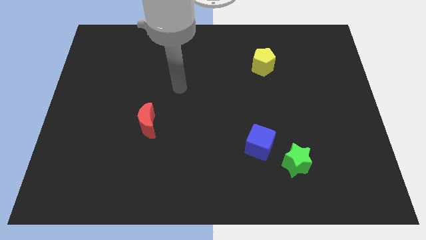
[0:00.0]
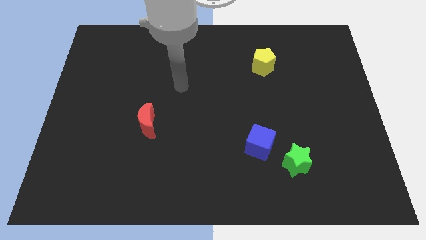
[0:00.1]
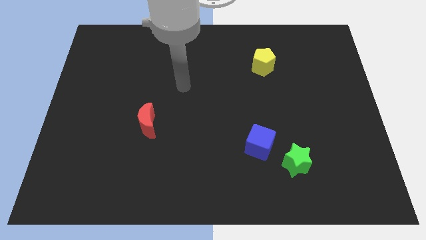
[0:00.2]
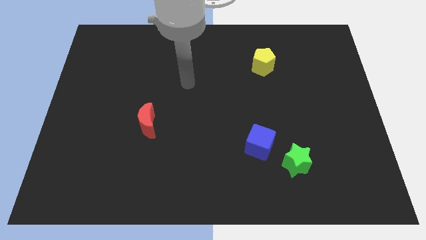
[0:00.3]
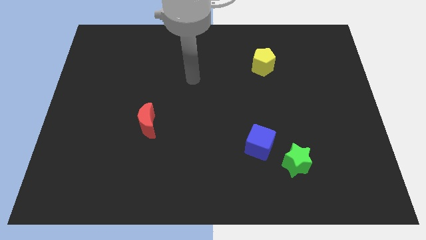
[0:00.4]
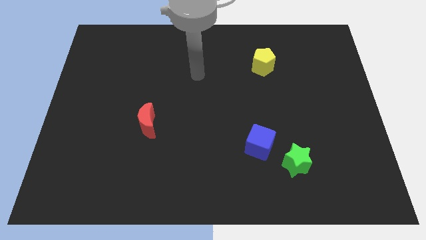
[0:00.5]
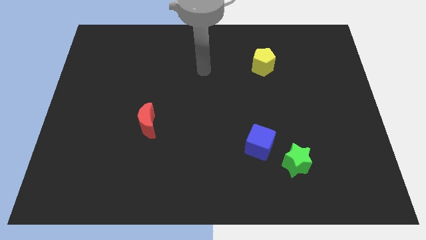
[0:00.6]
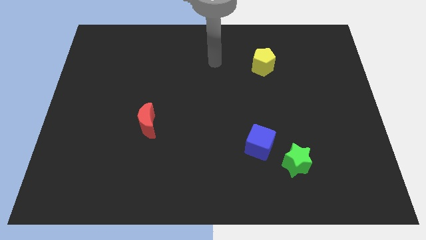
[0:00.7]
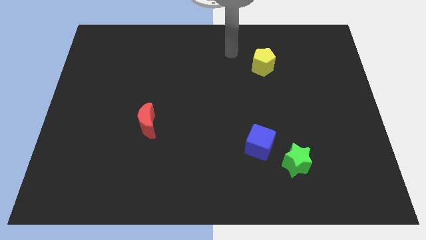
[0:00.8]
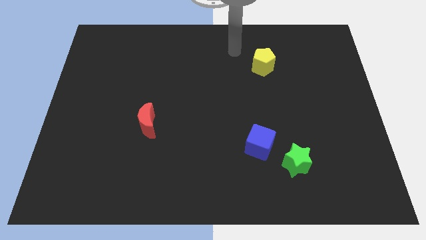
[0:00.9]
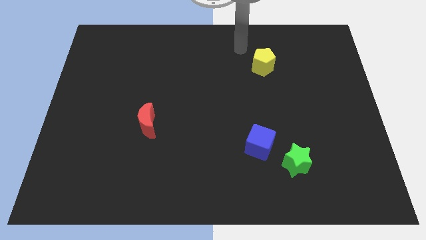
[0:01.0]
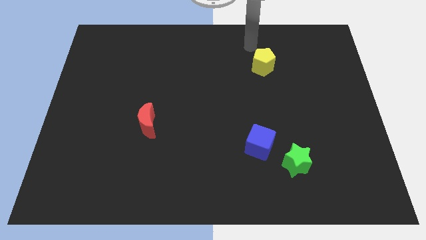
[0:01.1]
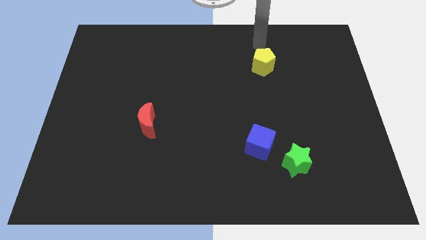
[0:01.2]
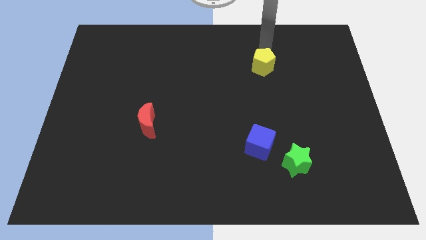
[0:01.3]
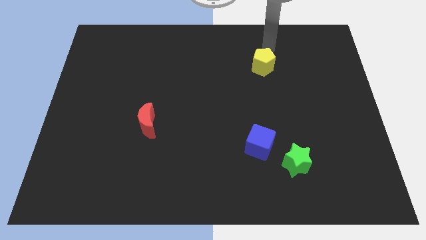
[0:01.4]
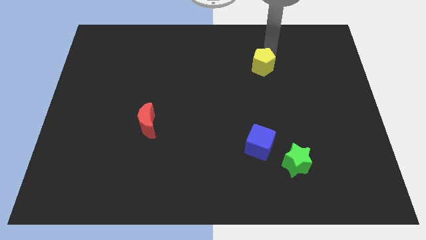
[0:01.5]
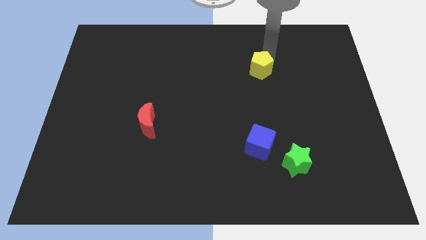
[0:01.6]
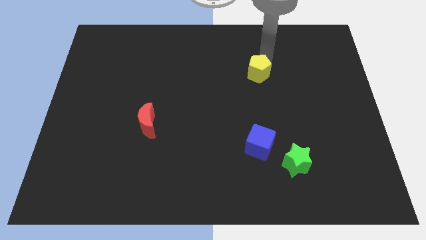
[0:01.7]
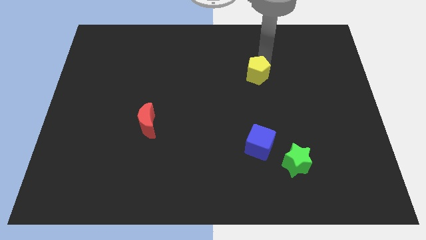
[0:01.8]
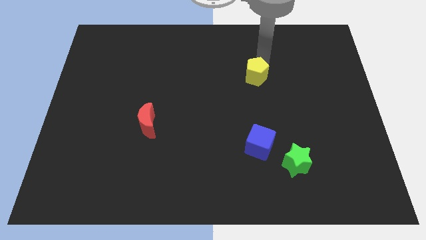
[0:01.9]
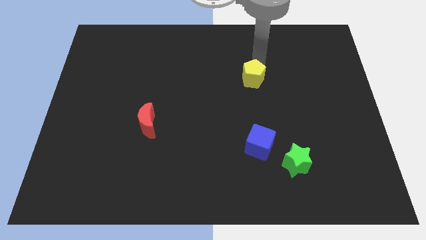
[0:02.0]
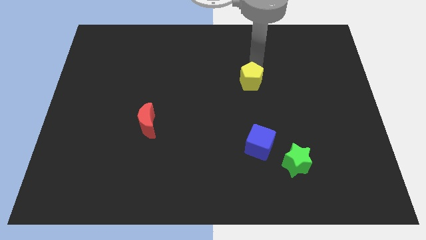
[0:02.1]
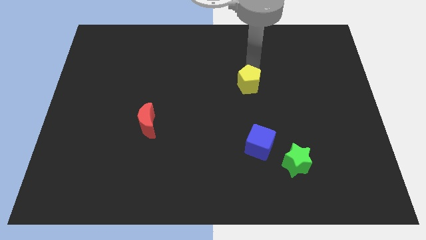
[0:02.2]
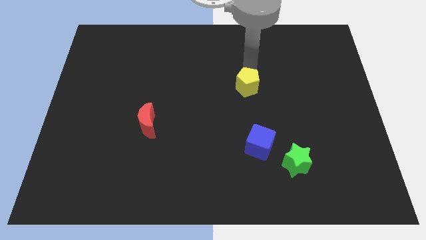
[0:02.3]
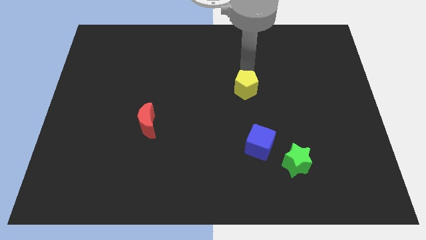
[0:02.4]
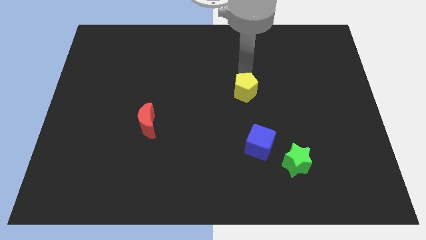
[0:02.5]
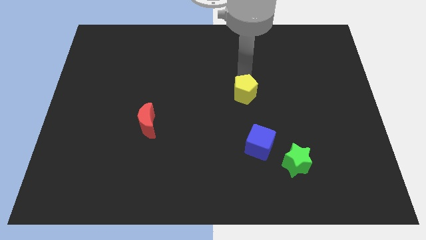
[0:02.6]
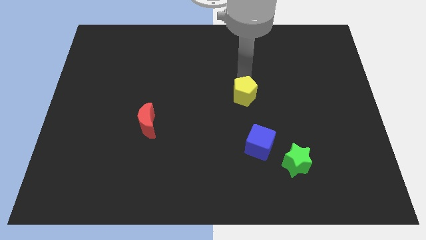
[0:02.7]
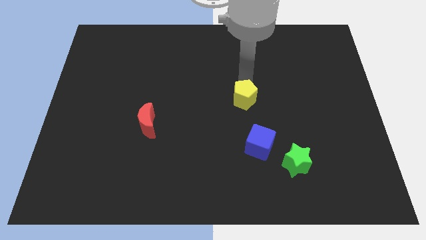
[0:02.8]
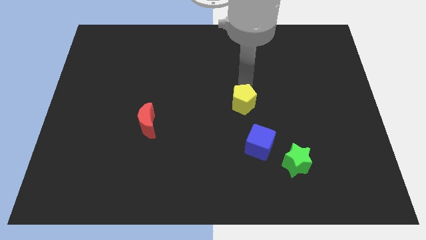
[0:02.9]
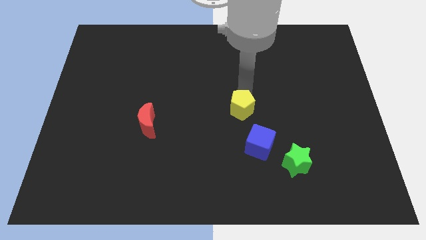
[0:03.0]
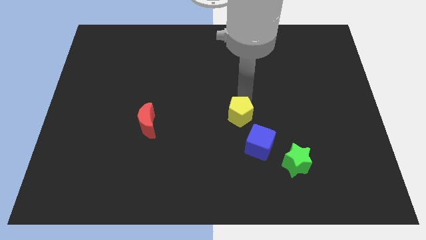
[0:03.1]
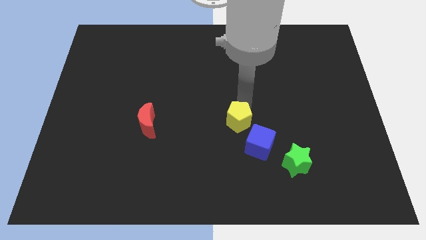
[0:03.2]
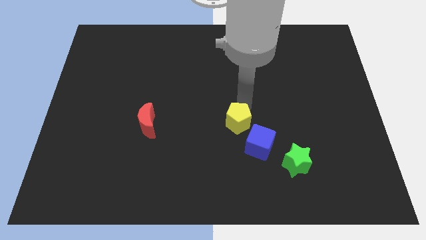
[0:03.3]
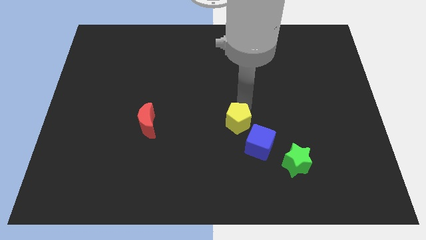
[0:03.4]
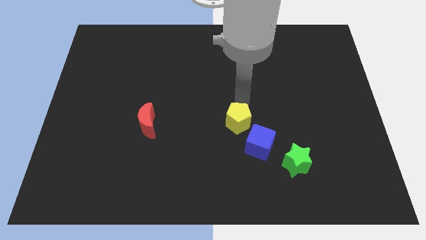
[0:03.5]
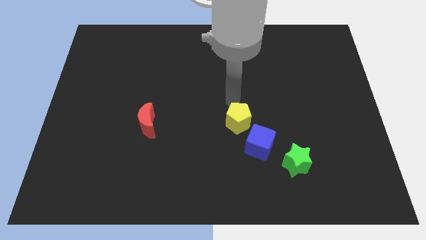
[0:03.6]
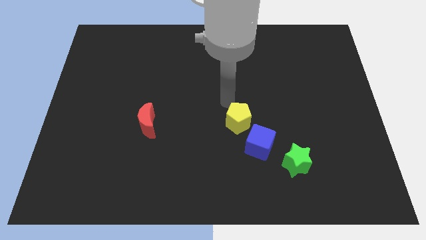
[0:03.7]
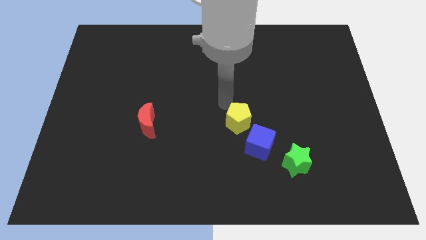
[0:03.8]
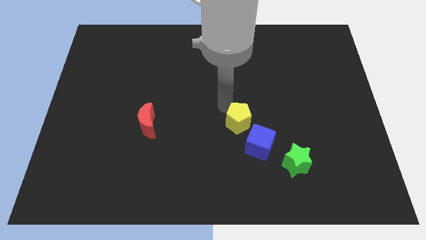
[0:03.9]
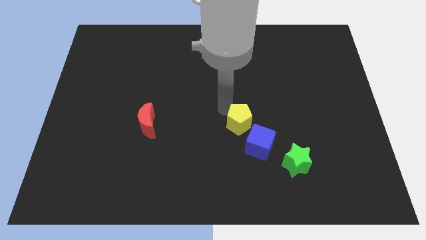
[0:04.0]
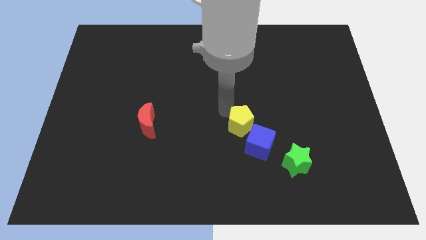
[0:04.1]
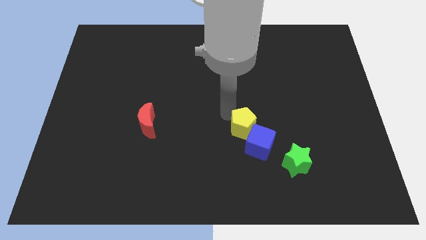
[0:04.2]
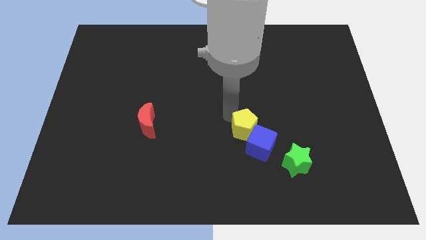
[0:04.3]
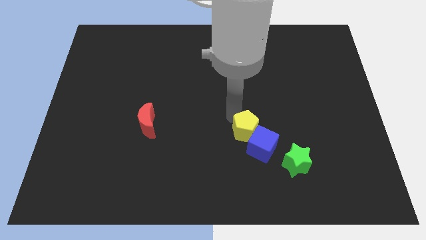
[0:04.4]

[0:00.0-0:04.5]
move the yellow block to the cube

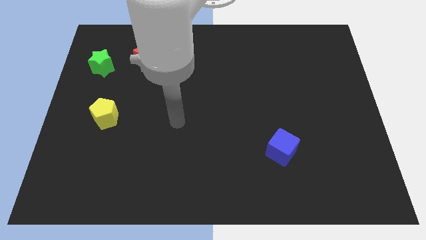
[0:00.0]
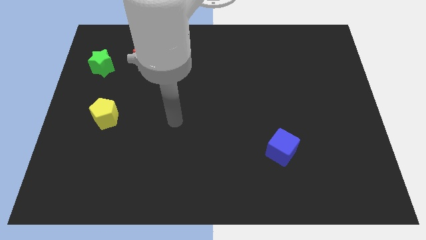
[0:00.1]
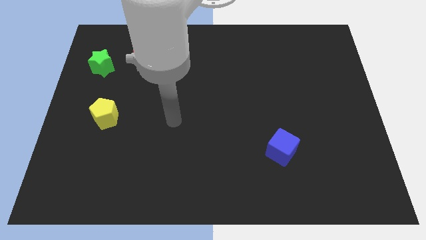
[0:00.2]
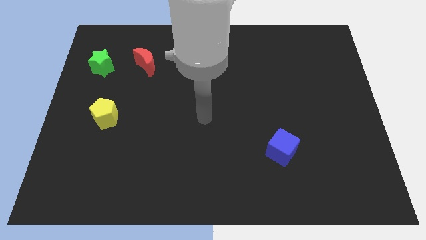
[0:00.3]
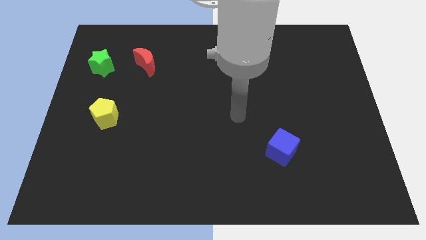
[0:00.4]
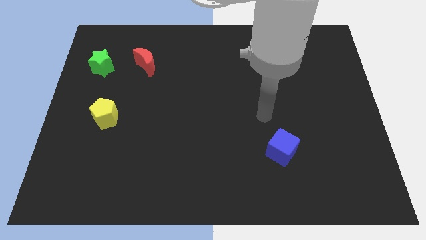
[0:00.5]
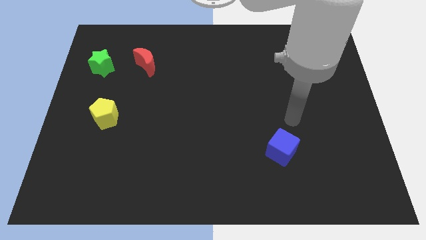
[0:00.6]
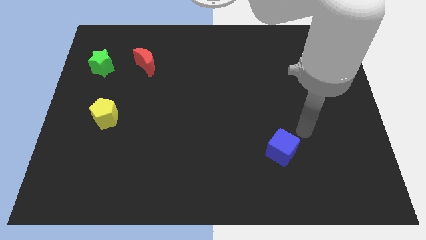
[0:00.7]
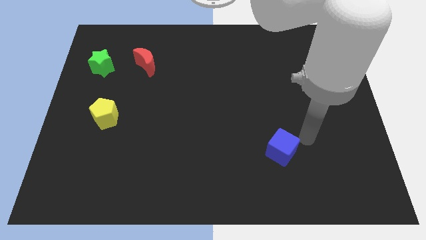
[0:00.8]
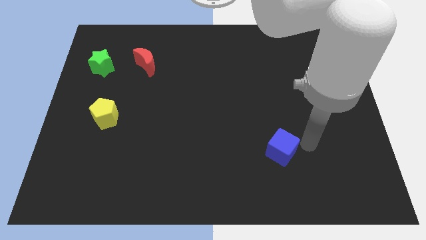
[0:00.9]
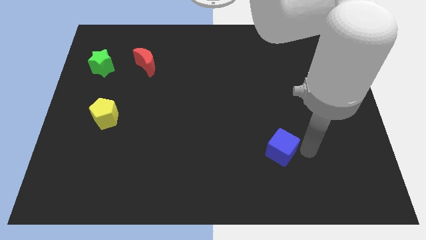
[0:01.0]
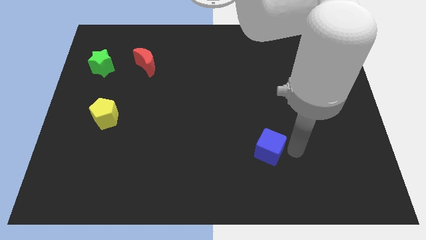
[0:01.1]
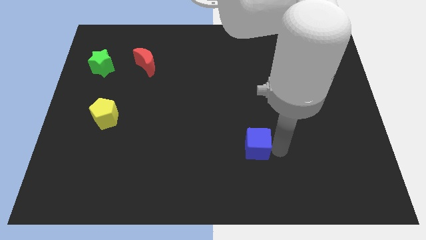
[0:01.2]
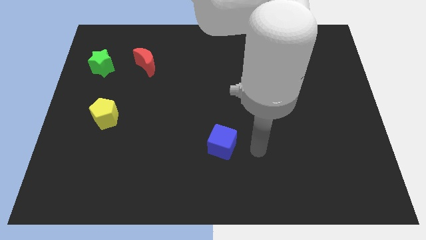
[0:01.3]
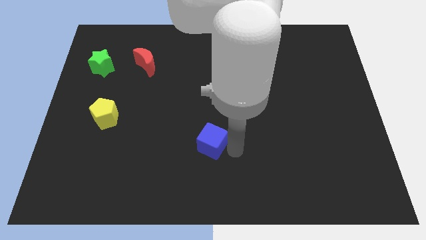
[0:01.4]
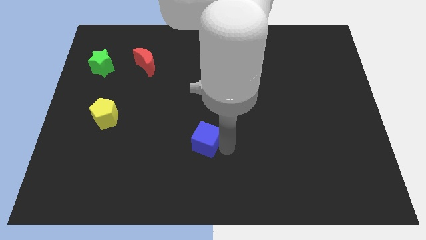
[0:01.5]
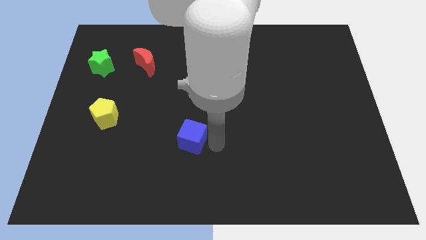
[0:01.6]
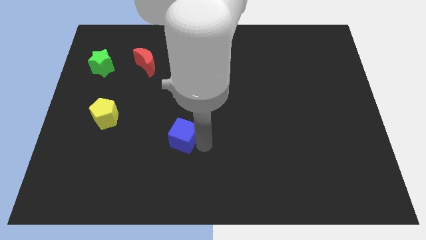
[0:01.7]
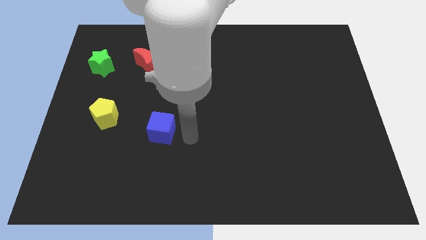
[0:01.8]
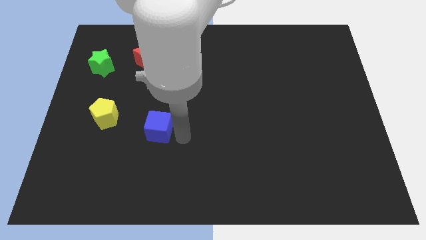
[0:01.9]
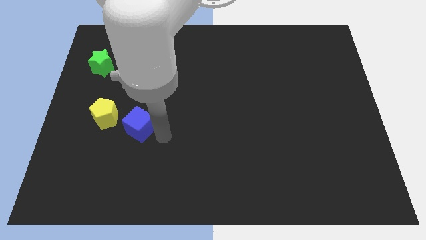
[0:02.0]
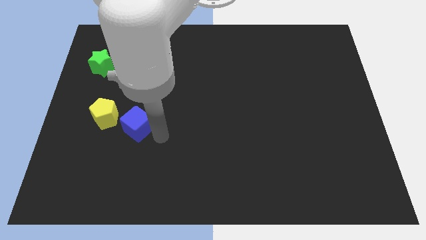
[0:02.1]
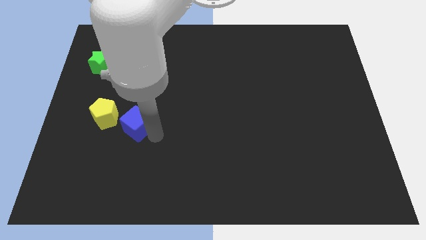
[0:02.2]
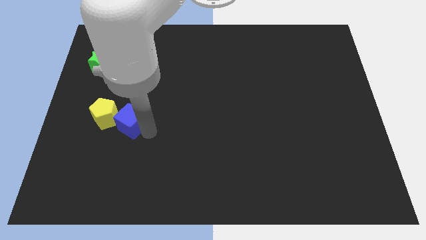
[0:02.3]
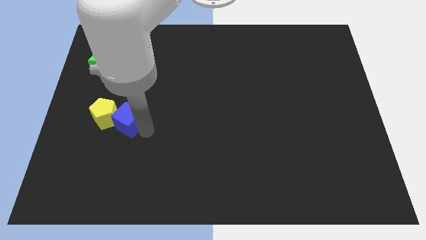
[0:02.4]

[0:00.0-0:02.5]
slide the cube close to the pentagon

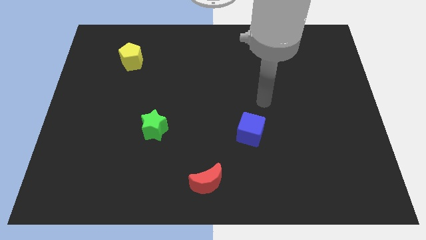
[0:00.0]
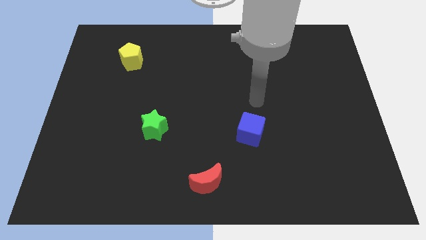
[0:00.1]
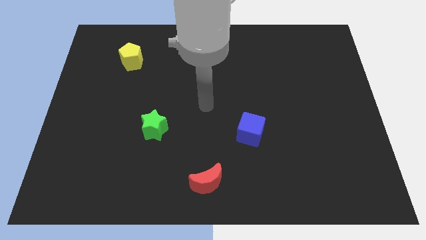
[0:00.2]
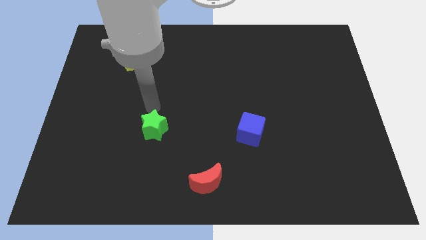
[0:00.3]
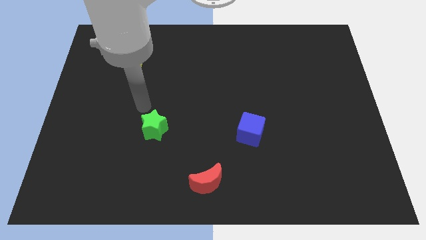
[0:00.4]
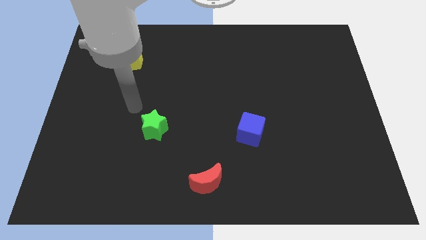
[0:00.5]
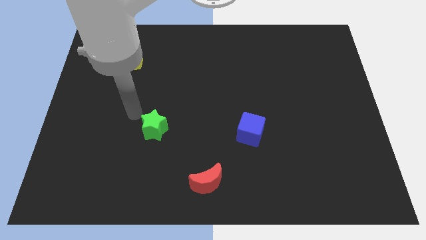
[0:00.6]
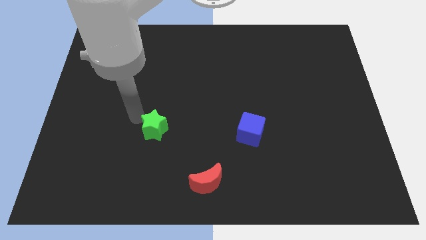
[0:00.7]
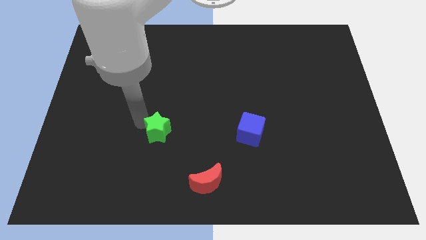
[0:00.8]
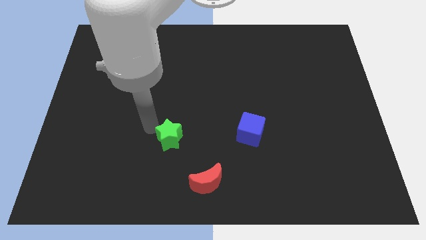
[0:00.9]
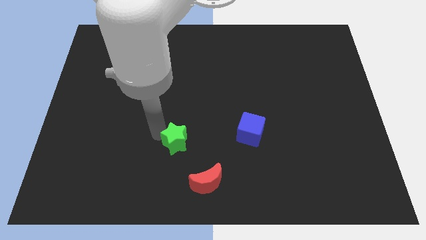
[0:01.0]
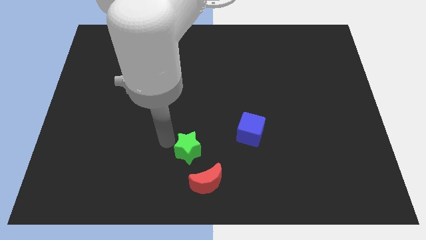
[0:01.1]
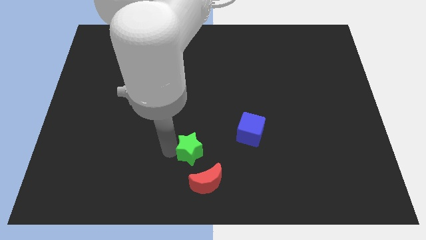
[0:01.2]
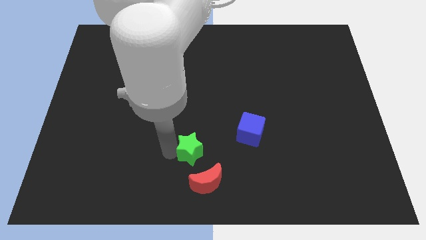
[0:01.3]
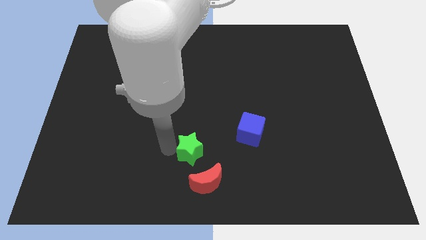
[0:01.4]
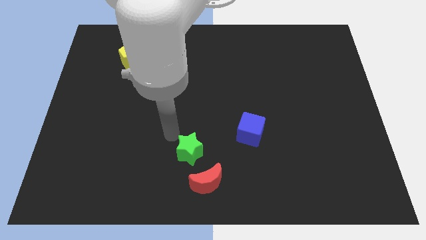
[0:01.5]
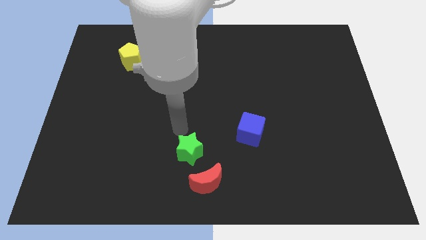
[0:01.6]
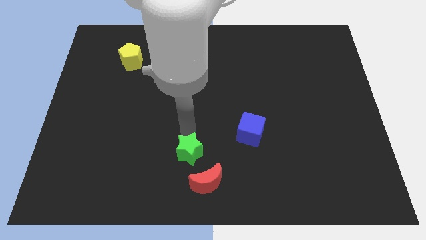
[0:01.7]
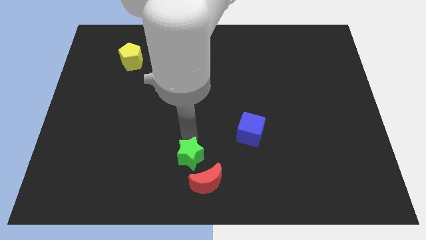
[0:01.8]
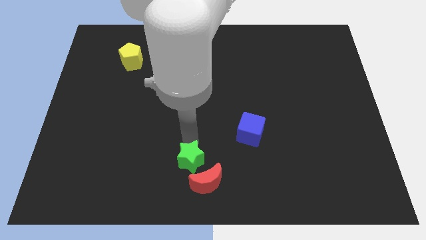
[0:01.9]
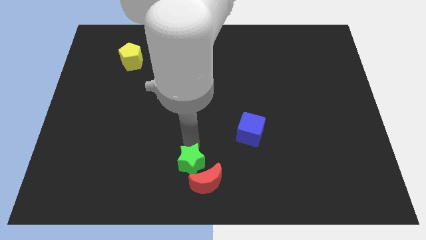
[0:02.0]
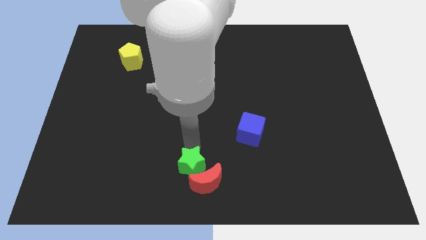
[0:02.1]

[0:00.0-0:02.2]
push the green star to the red block
